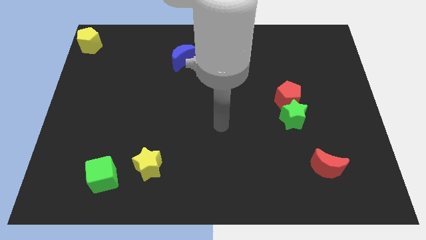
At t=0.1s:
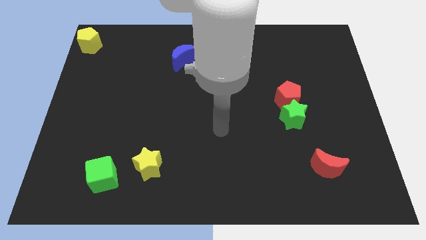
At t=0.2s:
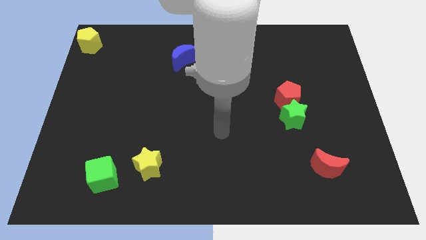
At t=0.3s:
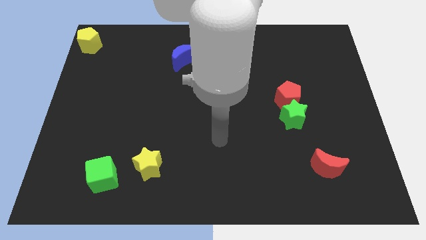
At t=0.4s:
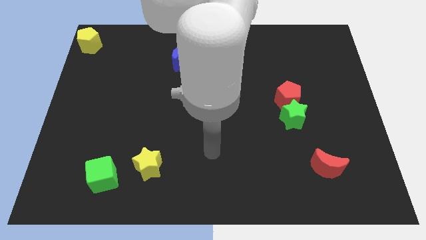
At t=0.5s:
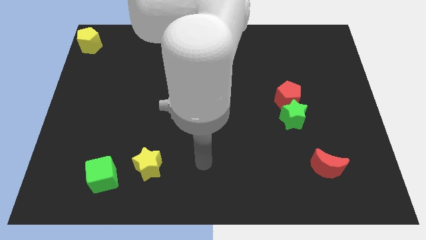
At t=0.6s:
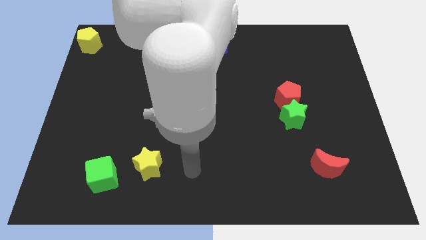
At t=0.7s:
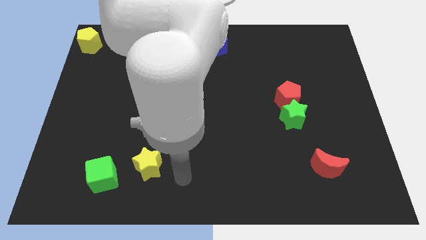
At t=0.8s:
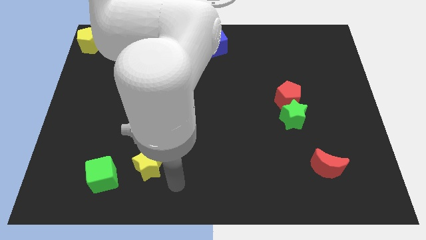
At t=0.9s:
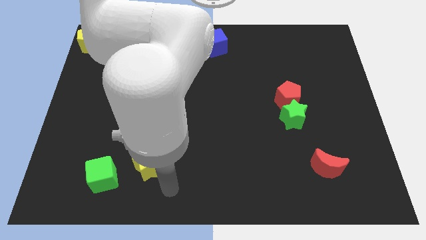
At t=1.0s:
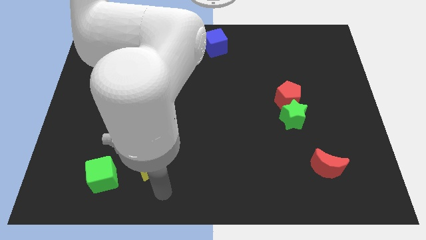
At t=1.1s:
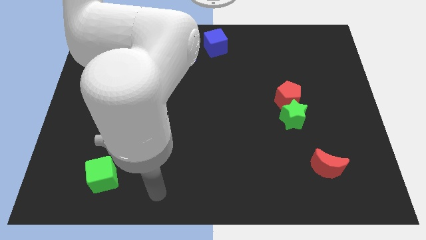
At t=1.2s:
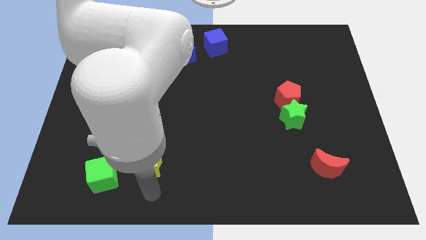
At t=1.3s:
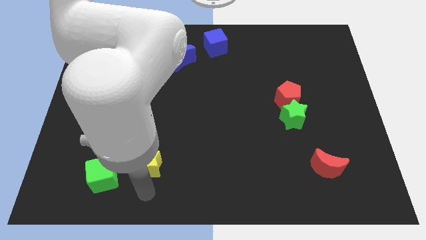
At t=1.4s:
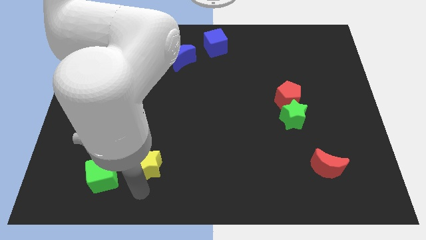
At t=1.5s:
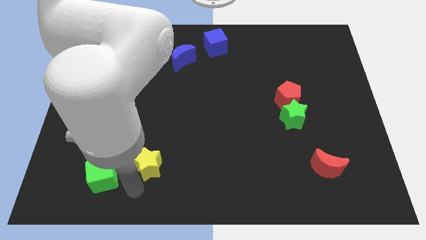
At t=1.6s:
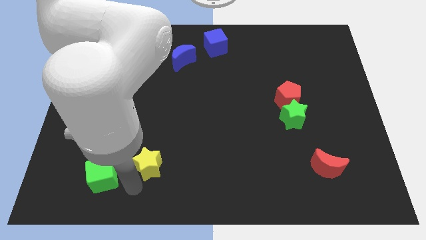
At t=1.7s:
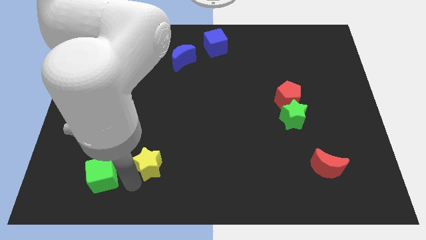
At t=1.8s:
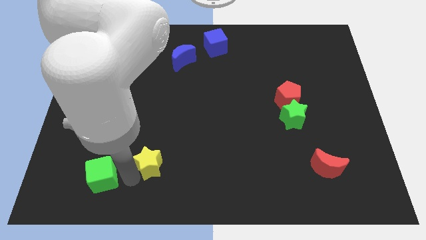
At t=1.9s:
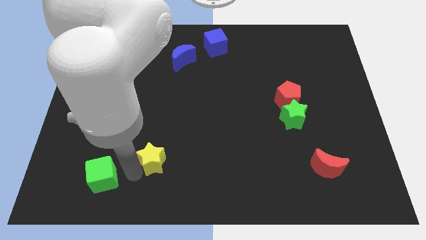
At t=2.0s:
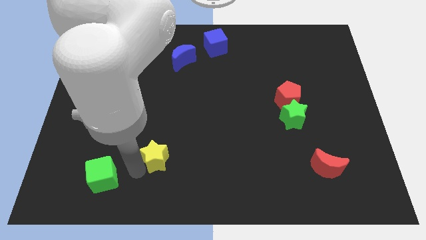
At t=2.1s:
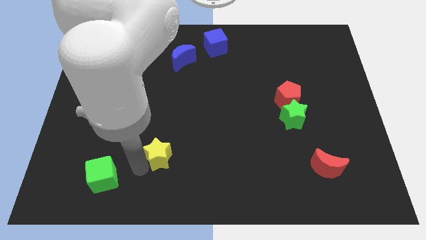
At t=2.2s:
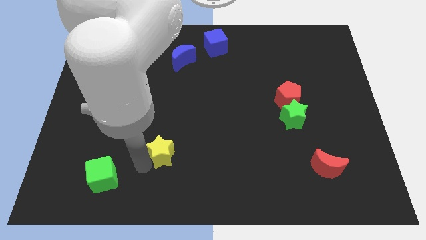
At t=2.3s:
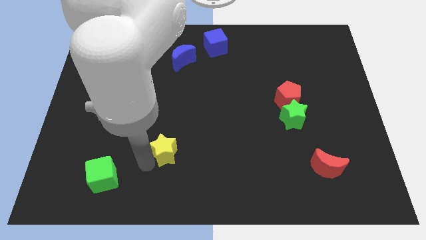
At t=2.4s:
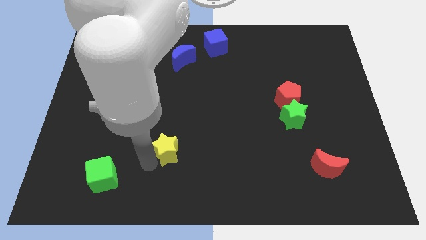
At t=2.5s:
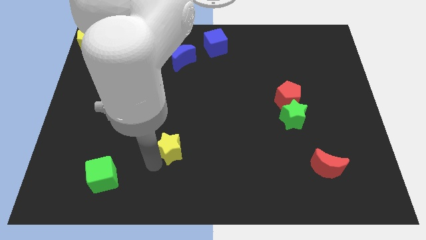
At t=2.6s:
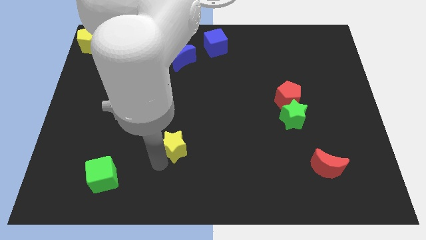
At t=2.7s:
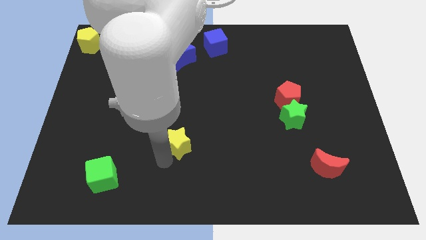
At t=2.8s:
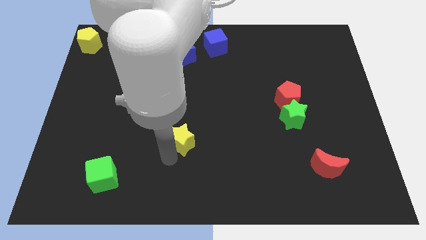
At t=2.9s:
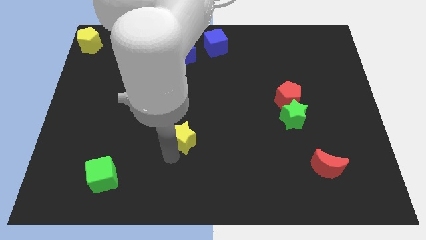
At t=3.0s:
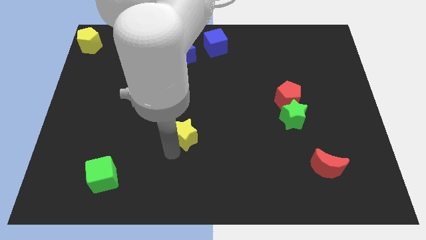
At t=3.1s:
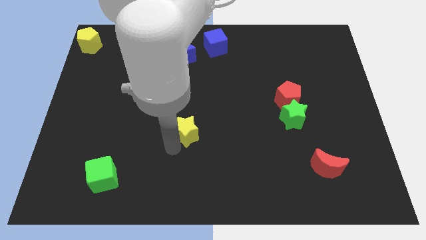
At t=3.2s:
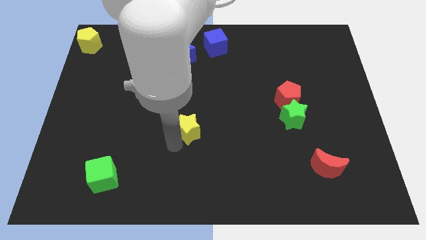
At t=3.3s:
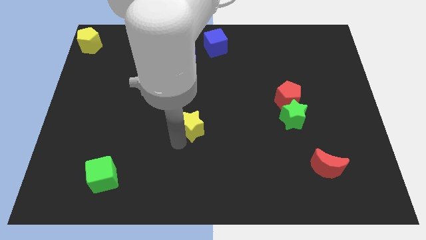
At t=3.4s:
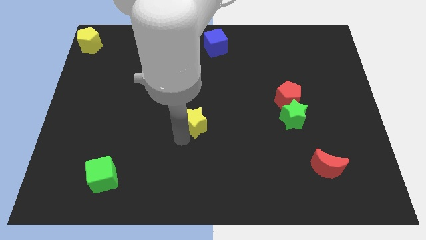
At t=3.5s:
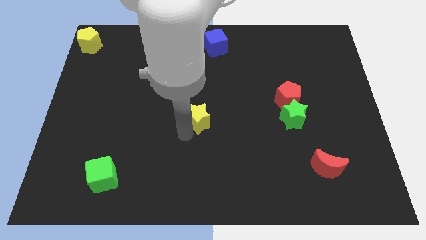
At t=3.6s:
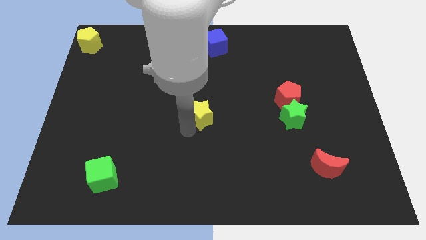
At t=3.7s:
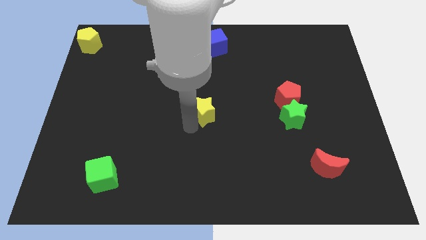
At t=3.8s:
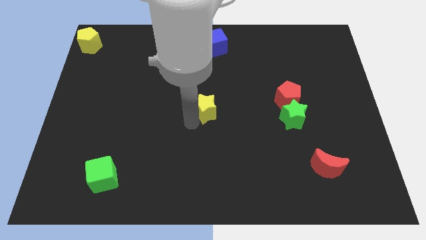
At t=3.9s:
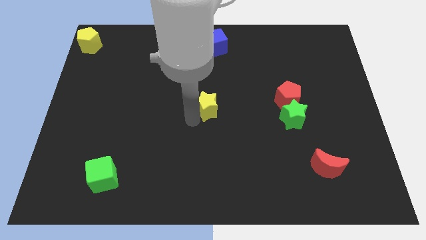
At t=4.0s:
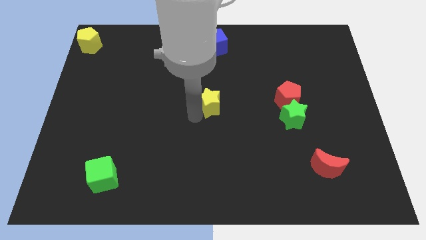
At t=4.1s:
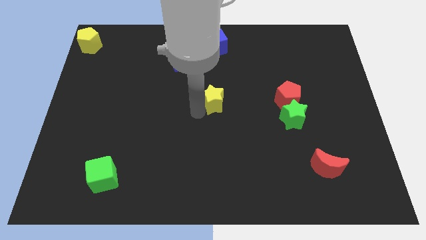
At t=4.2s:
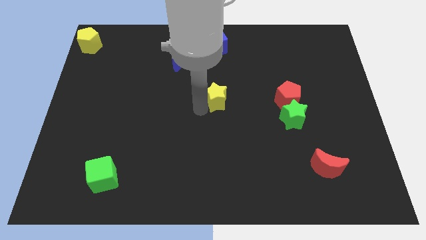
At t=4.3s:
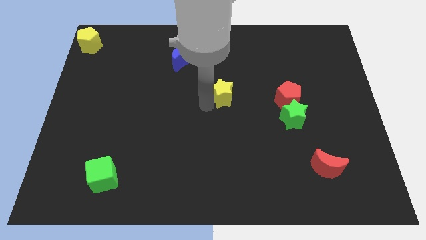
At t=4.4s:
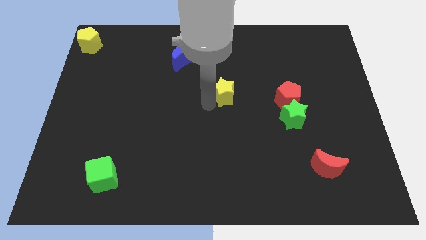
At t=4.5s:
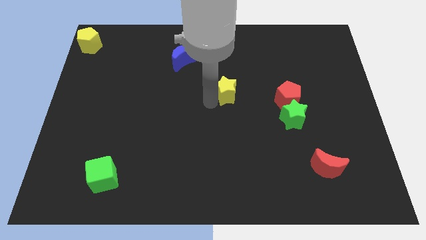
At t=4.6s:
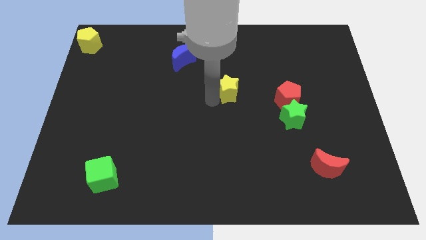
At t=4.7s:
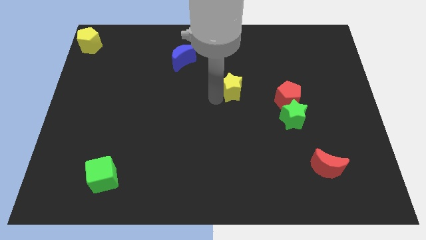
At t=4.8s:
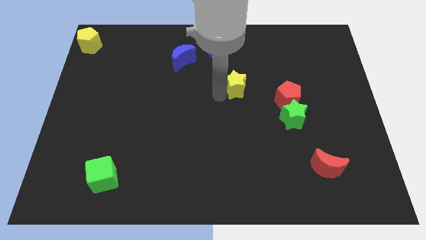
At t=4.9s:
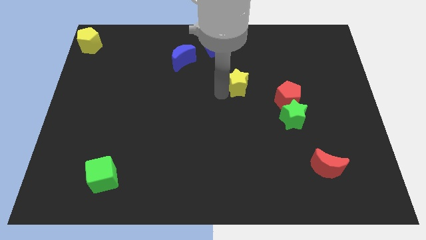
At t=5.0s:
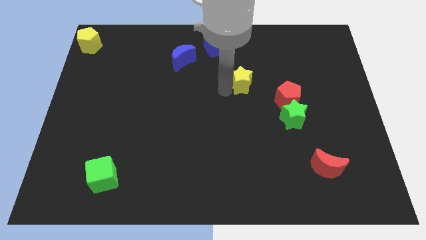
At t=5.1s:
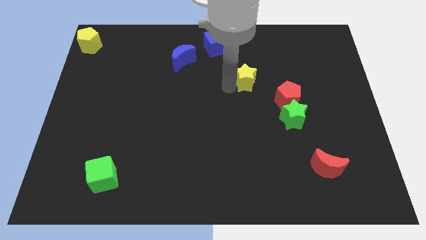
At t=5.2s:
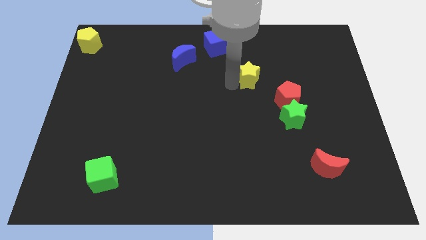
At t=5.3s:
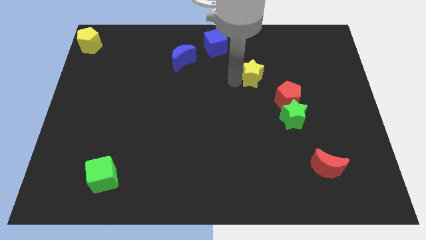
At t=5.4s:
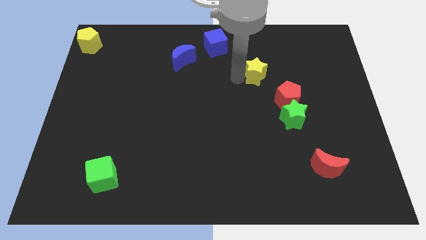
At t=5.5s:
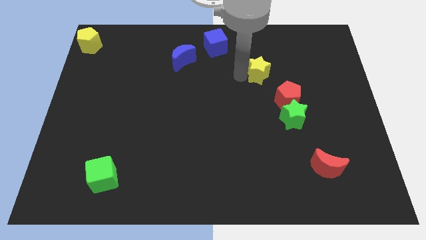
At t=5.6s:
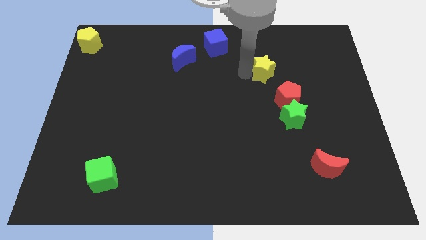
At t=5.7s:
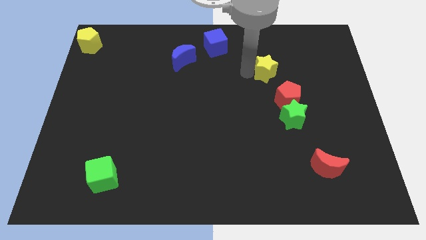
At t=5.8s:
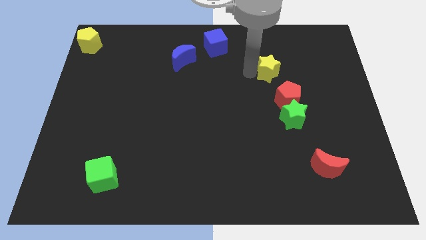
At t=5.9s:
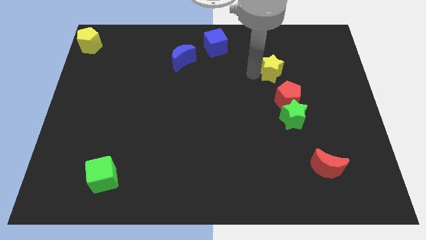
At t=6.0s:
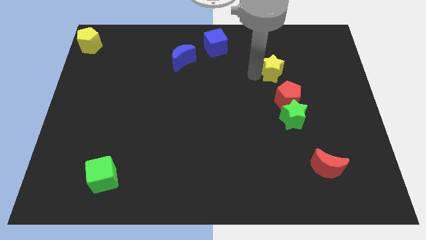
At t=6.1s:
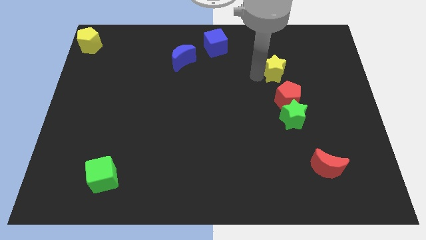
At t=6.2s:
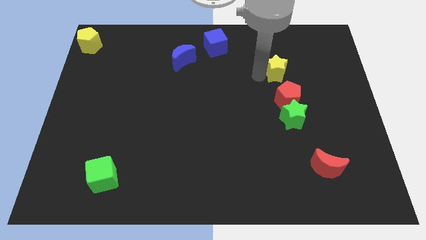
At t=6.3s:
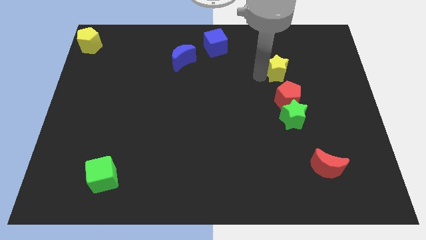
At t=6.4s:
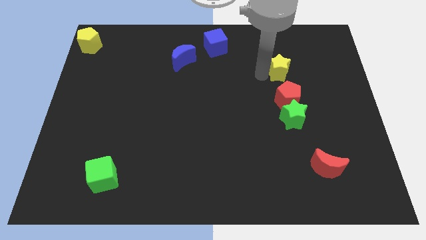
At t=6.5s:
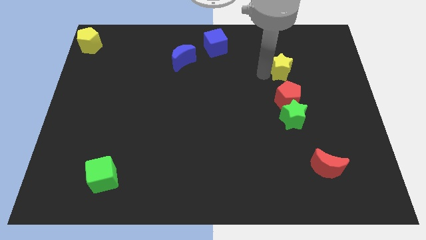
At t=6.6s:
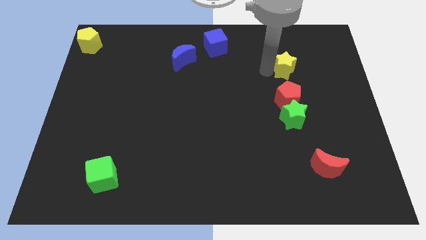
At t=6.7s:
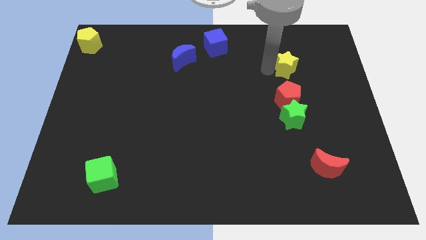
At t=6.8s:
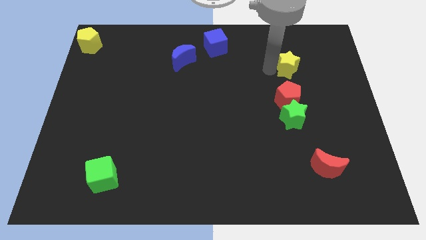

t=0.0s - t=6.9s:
place the yellow star above the red pentagon

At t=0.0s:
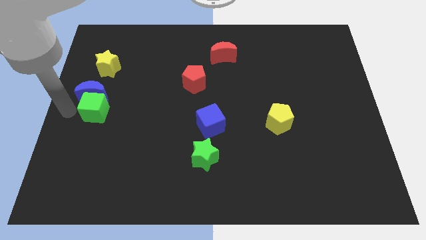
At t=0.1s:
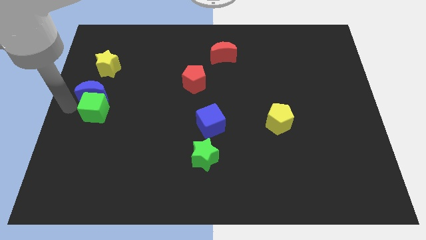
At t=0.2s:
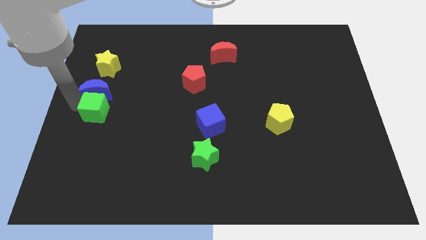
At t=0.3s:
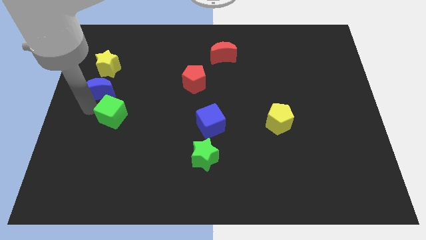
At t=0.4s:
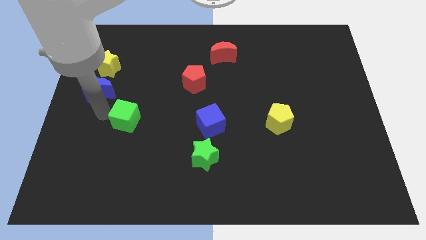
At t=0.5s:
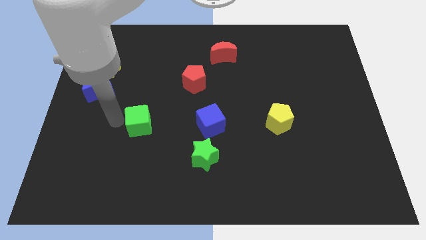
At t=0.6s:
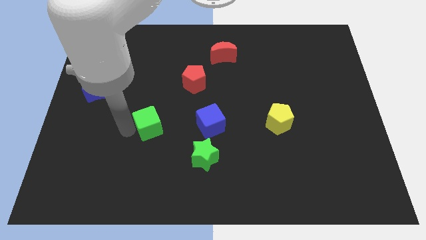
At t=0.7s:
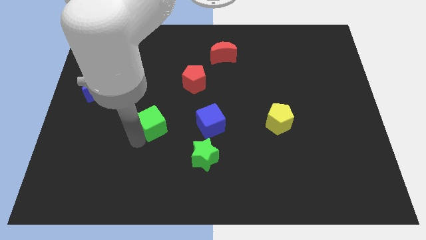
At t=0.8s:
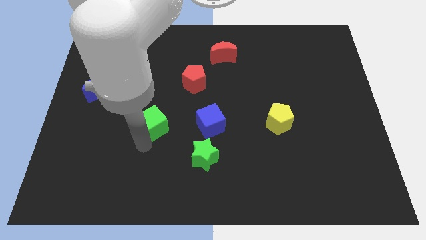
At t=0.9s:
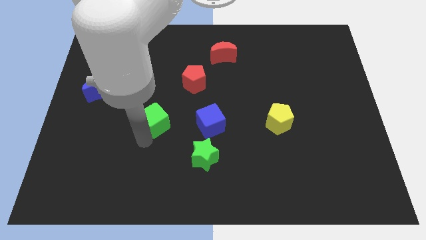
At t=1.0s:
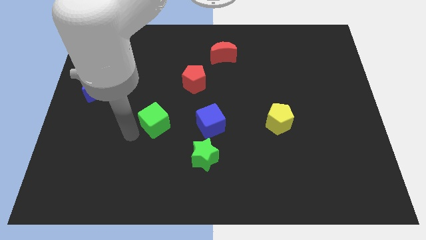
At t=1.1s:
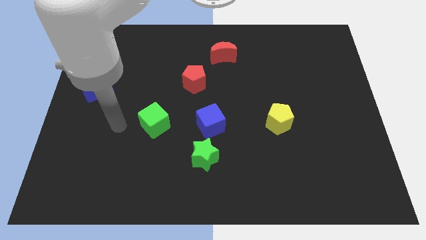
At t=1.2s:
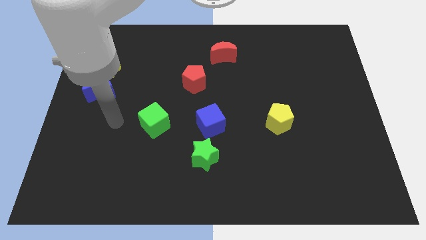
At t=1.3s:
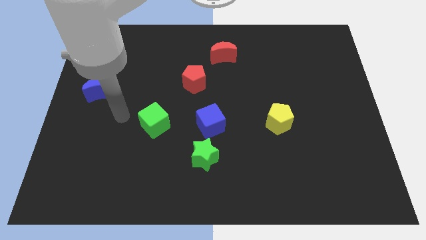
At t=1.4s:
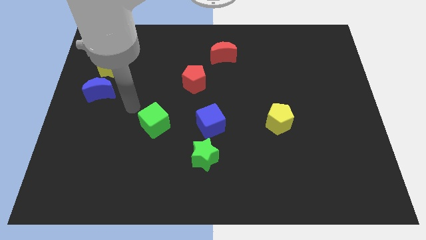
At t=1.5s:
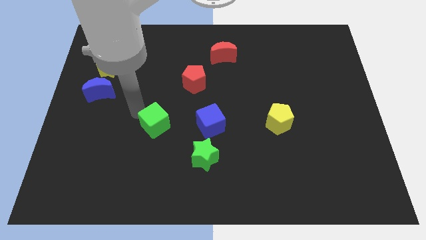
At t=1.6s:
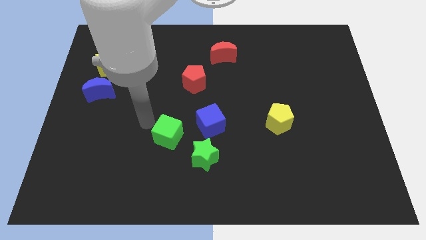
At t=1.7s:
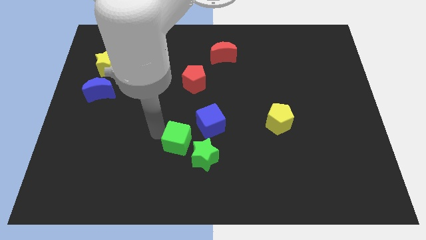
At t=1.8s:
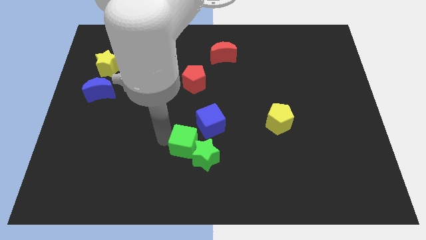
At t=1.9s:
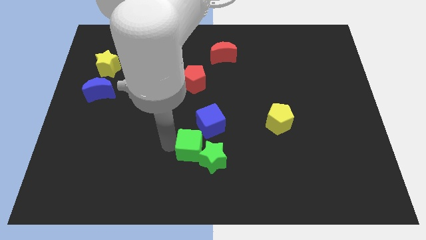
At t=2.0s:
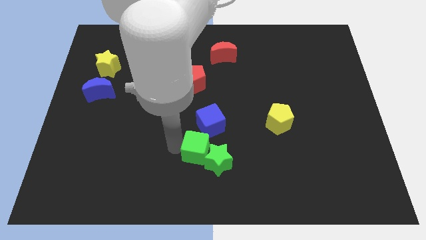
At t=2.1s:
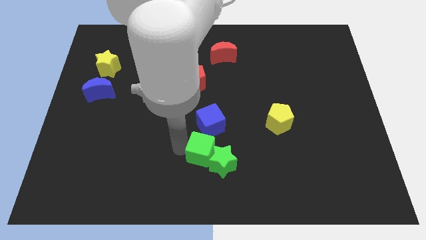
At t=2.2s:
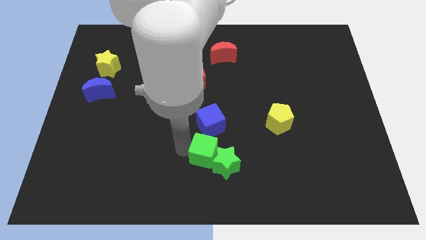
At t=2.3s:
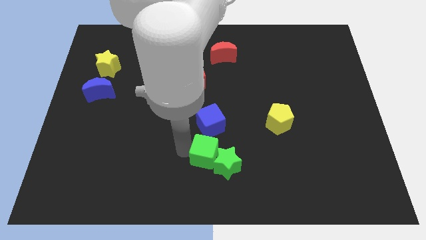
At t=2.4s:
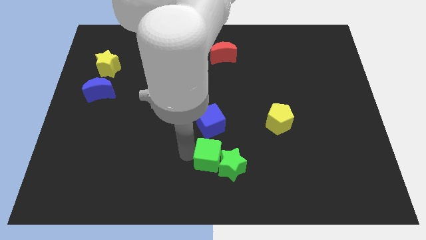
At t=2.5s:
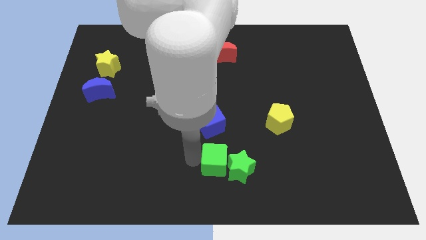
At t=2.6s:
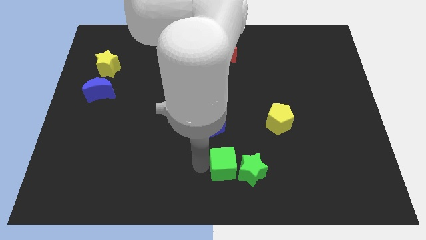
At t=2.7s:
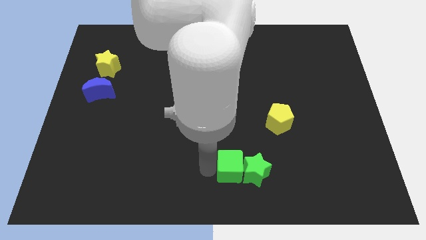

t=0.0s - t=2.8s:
move the green cube into green star
